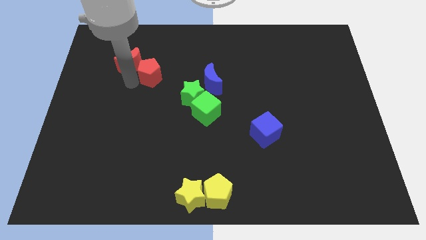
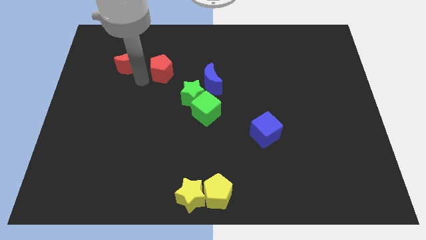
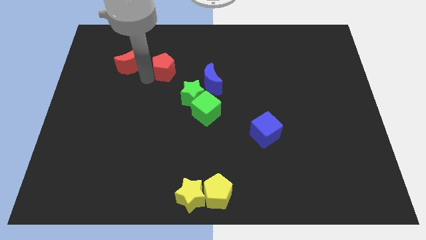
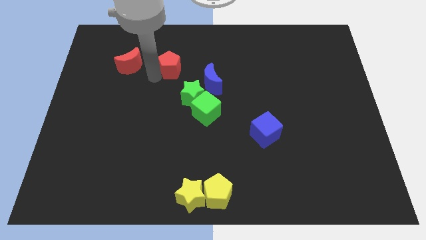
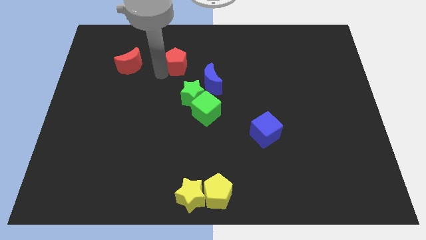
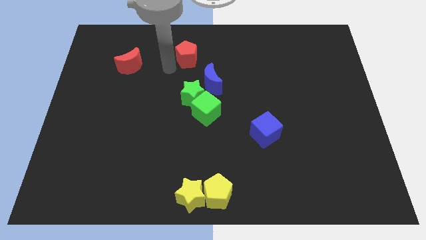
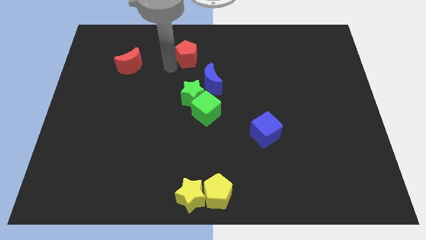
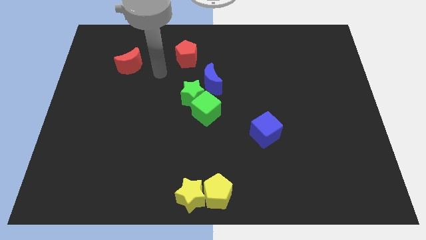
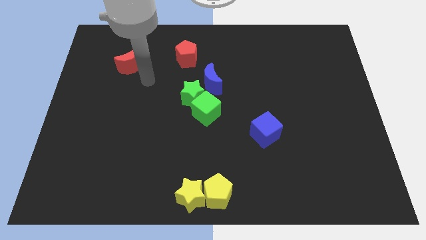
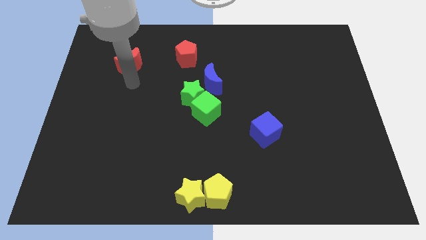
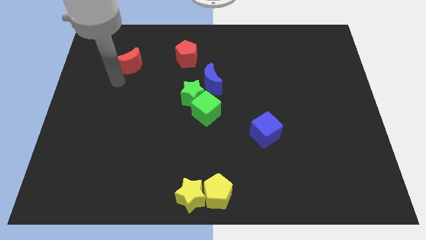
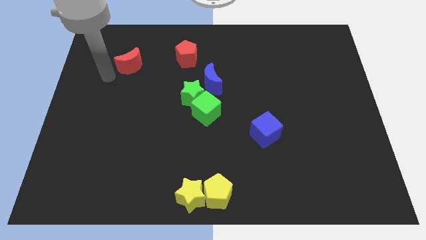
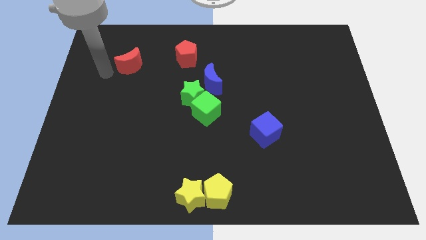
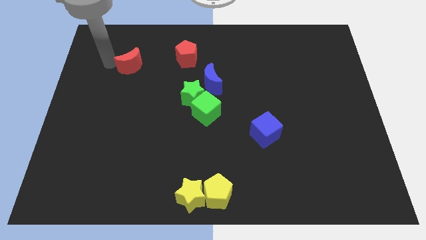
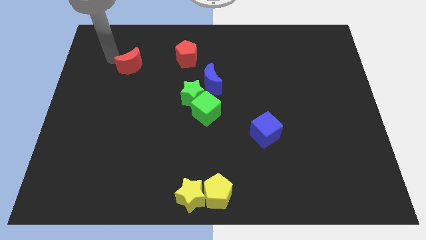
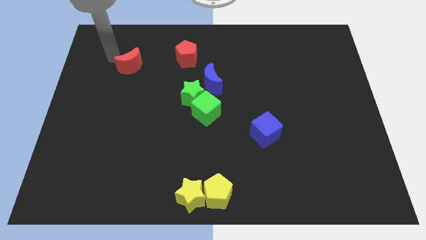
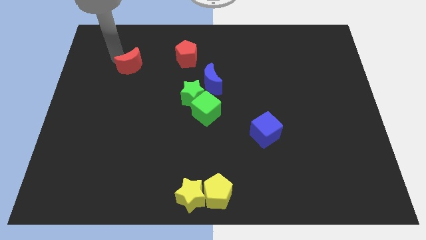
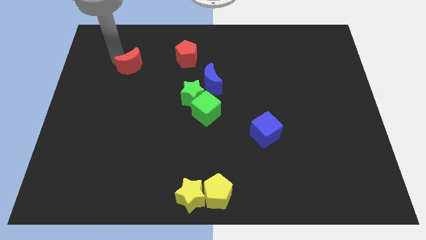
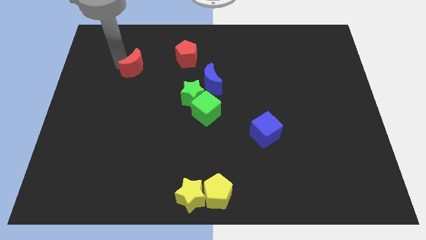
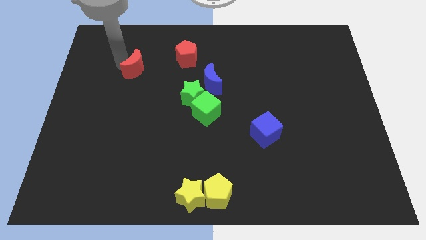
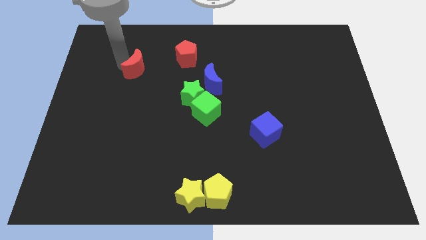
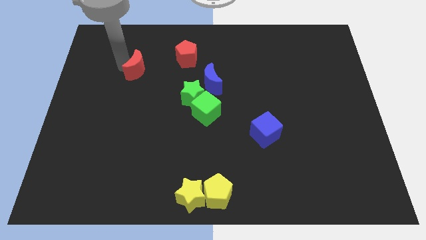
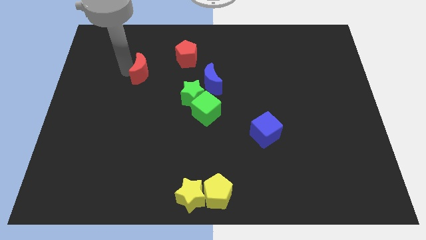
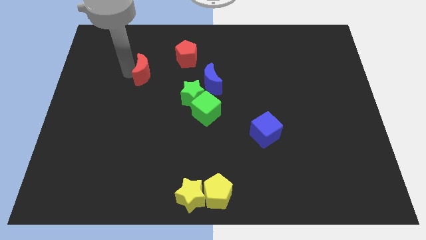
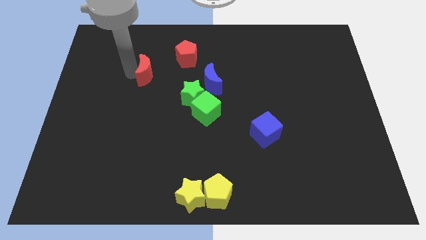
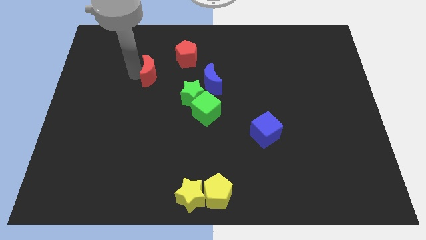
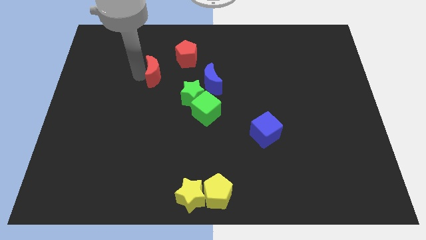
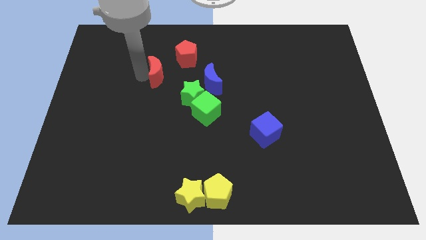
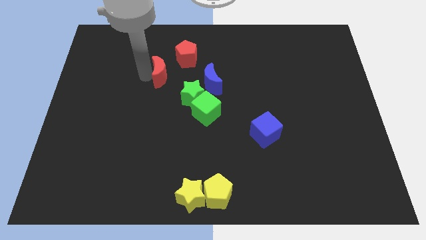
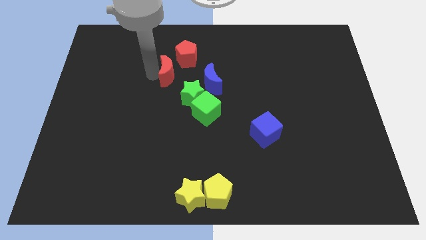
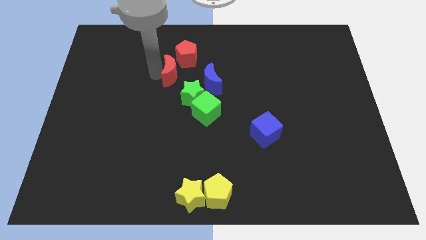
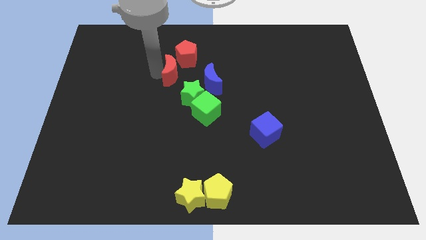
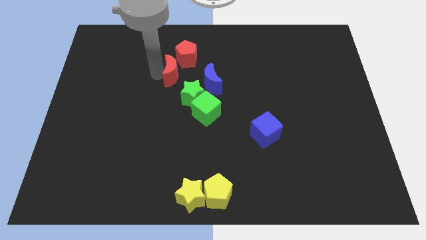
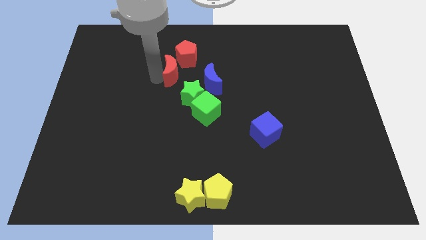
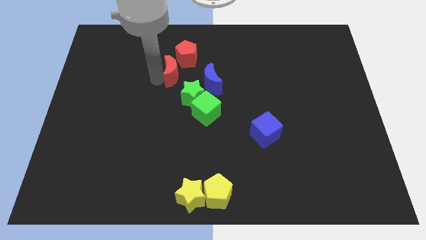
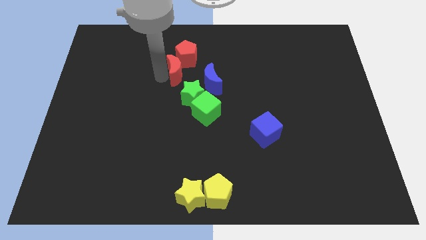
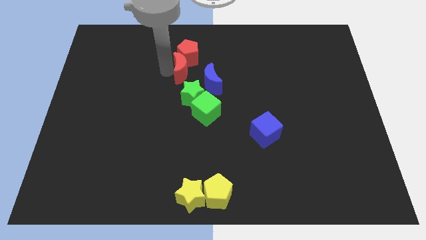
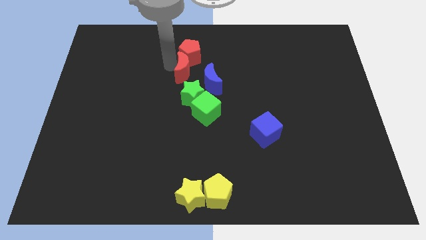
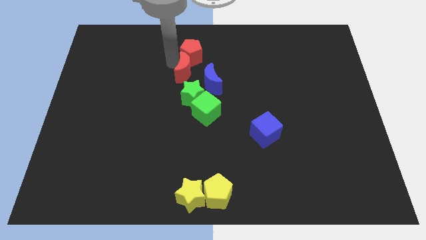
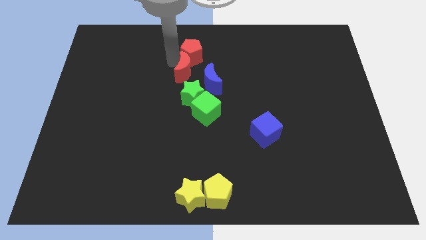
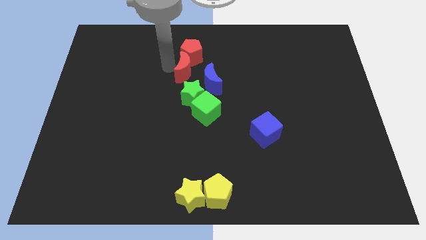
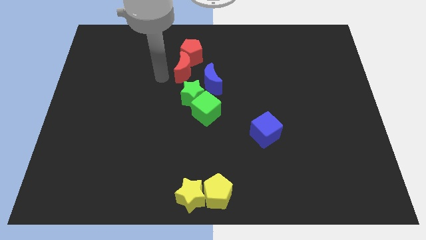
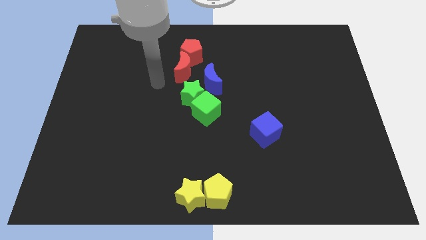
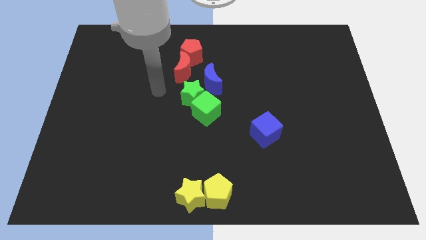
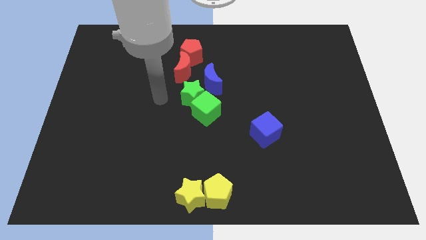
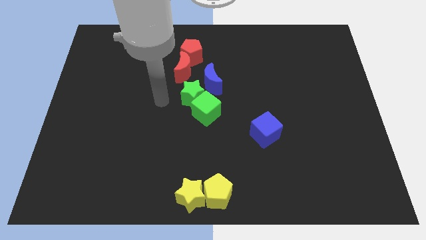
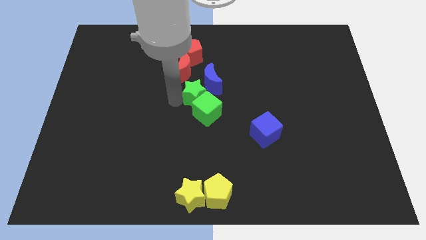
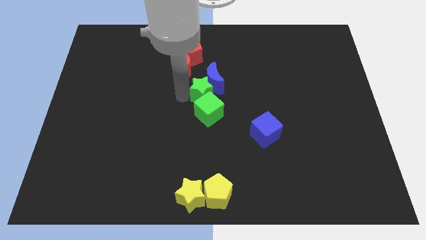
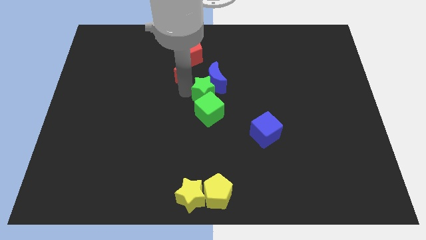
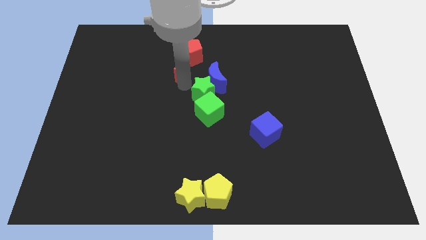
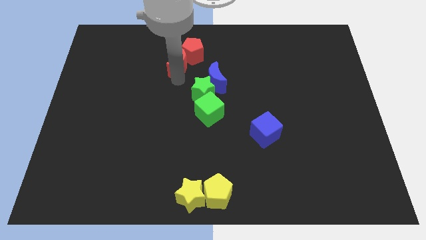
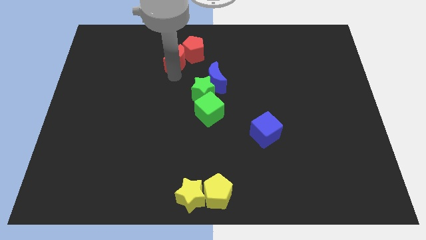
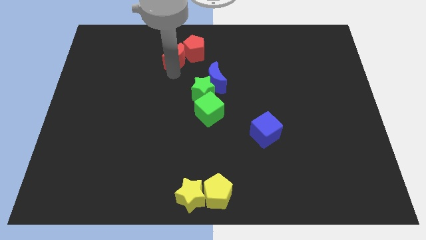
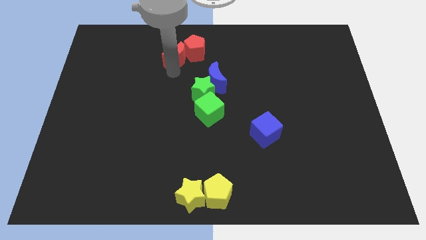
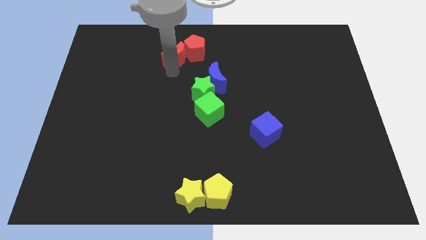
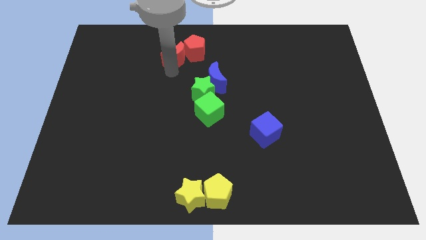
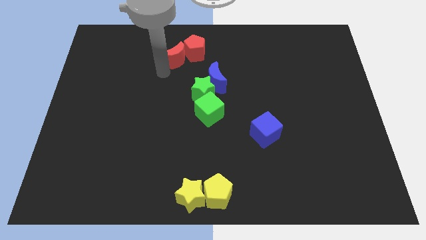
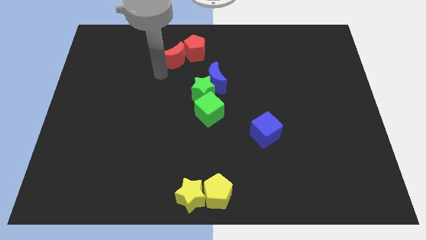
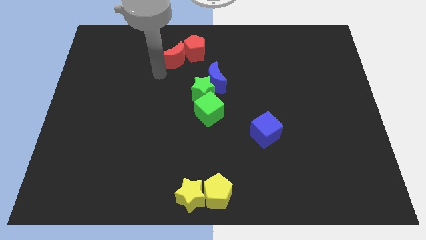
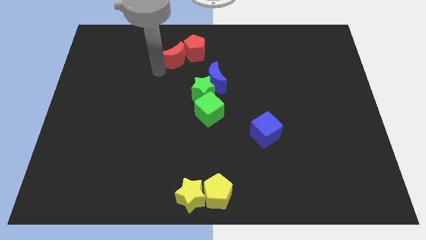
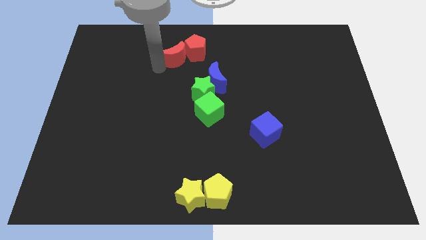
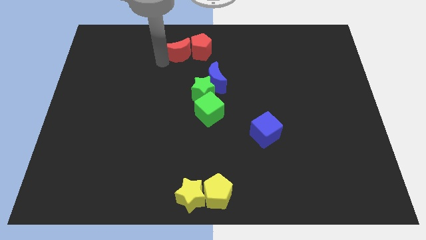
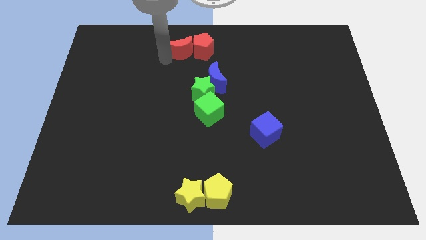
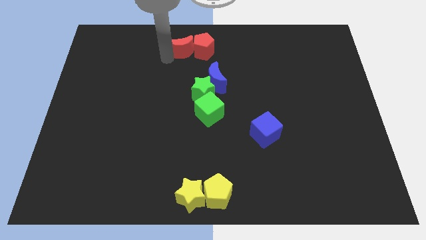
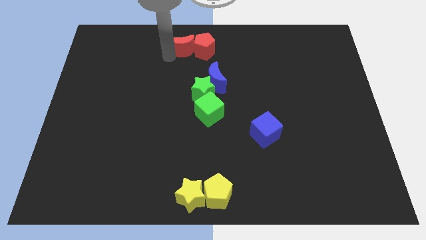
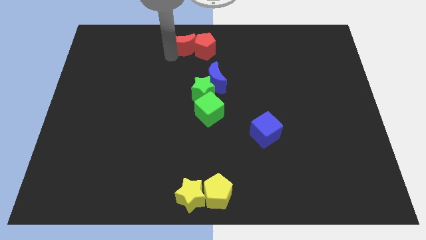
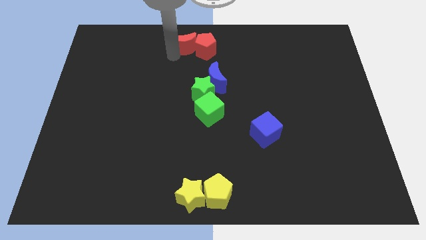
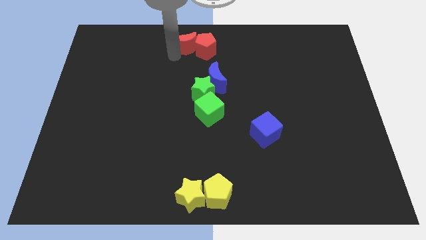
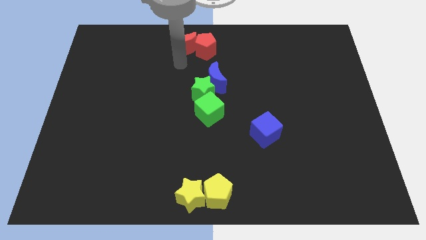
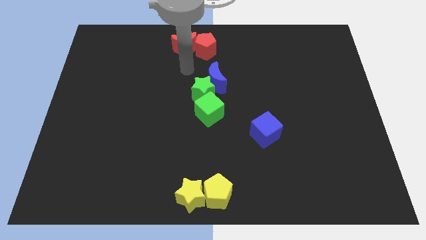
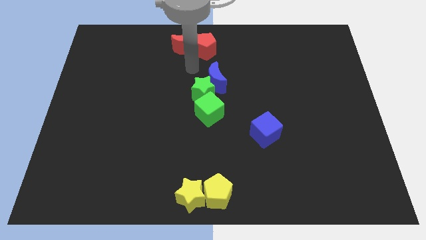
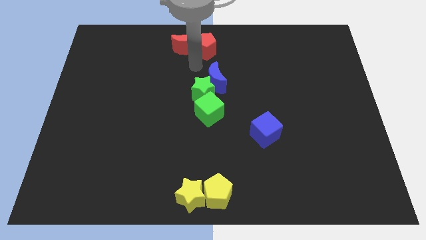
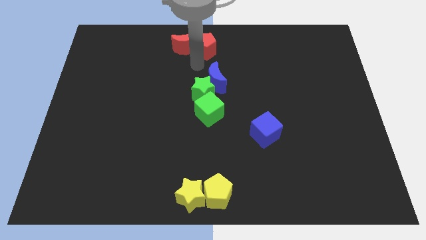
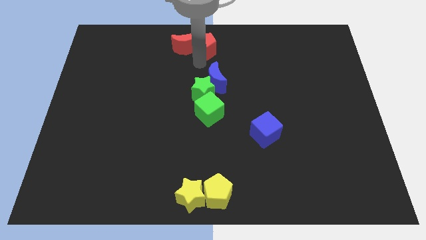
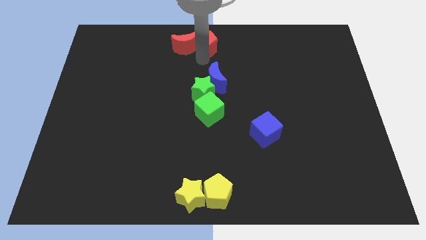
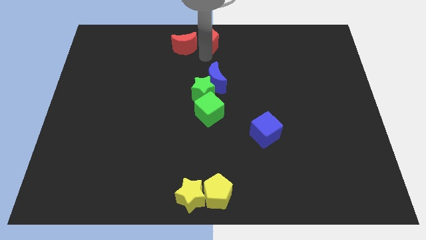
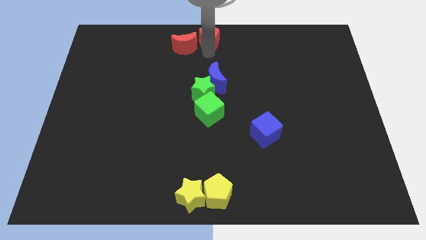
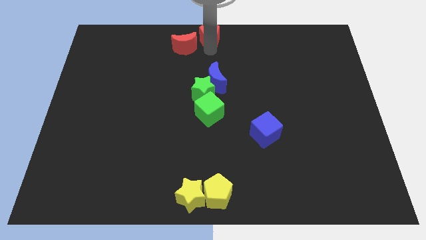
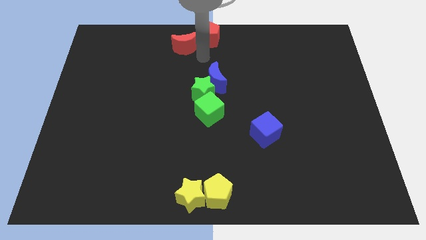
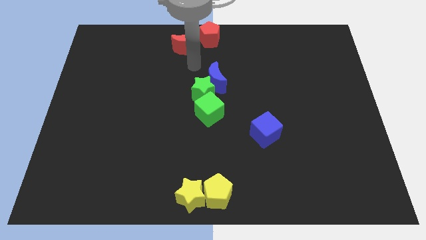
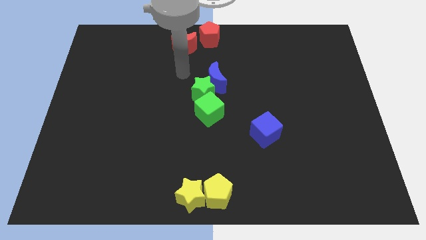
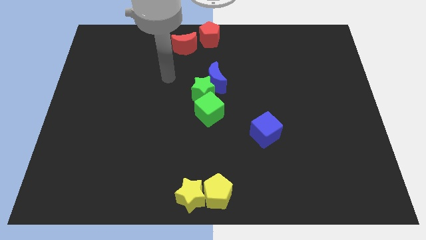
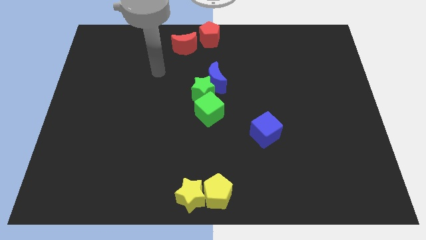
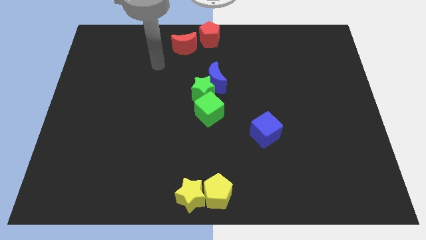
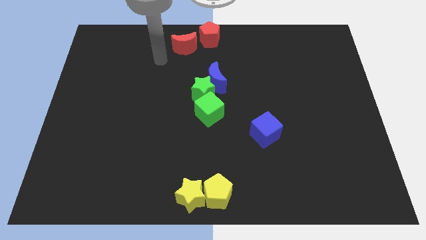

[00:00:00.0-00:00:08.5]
separate red pentagon from red moon

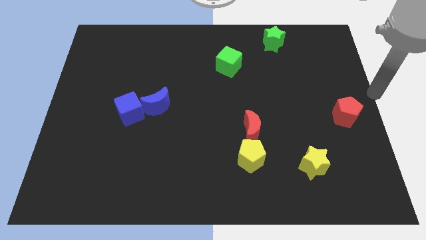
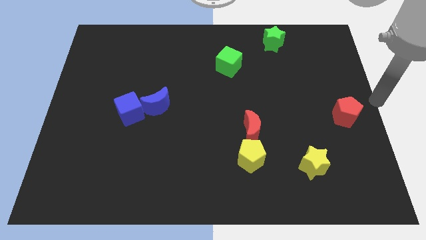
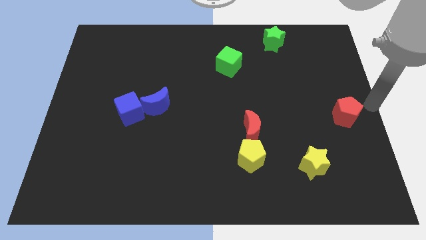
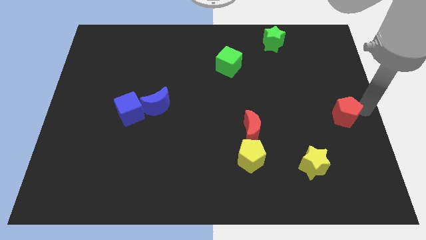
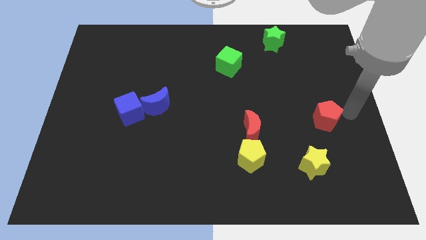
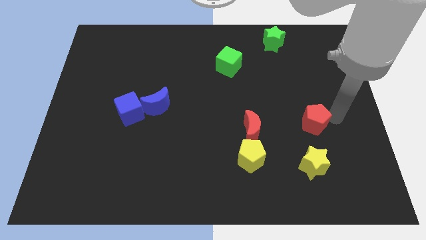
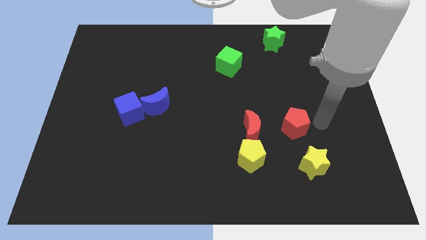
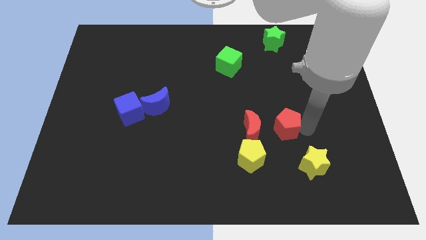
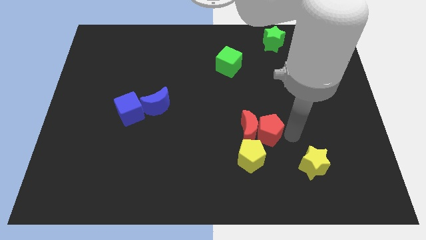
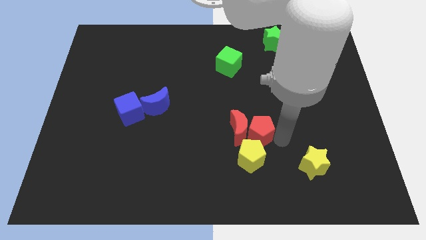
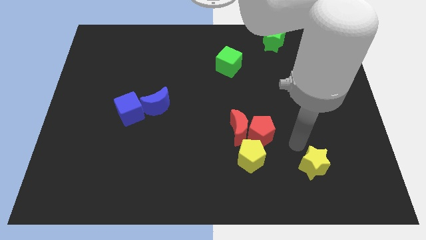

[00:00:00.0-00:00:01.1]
move red pentagon to the right side of the red moon
